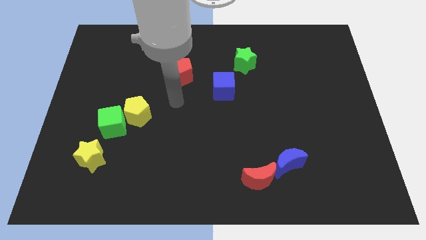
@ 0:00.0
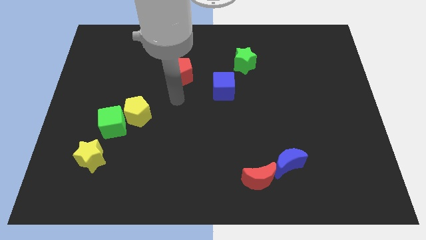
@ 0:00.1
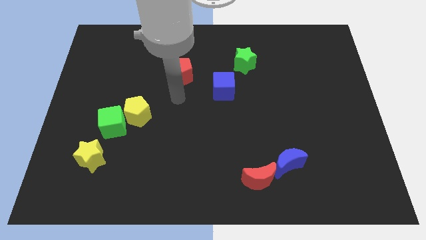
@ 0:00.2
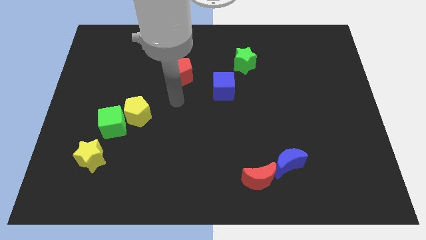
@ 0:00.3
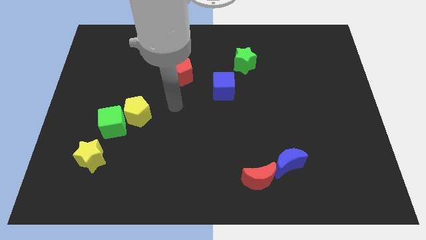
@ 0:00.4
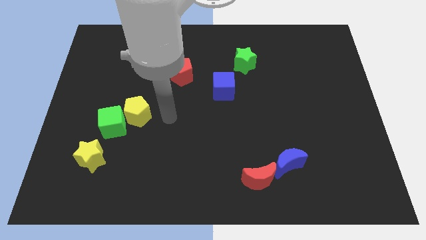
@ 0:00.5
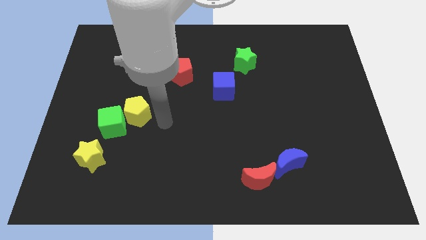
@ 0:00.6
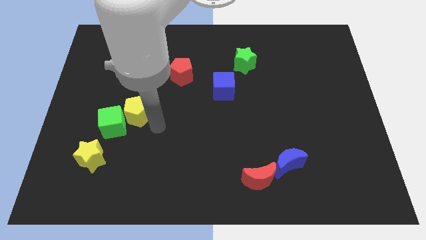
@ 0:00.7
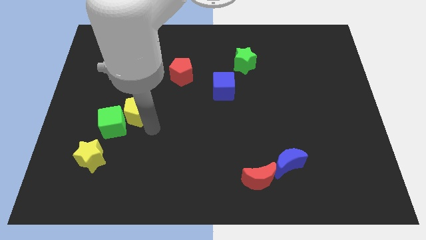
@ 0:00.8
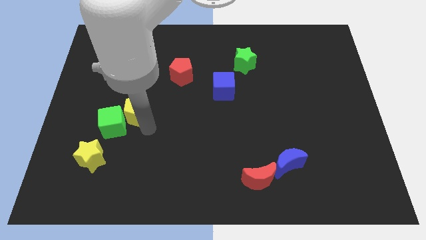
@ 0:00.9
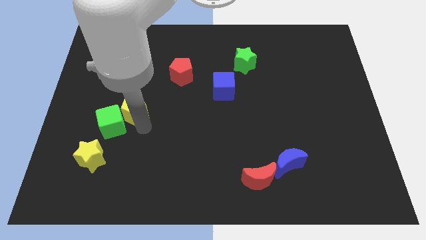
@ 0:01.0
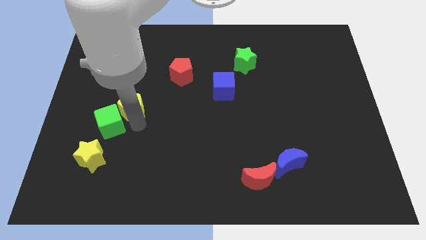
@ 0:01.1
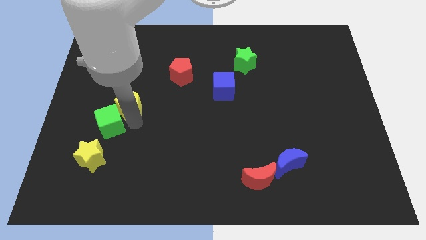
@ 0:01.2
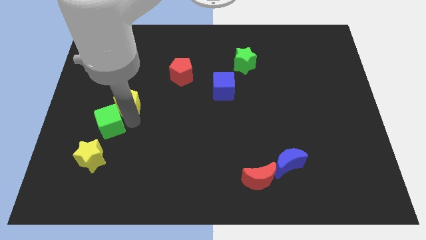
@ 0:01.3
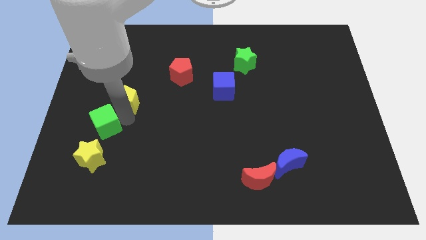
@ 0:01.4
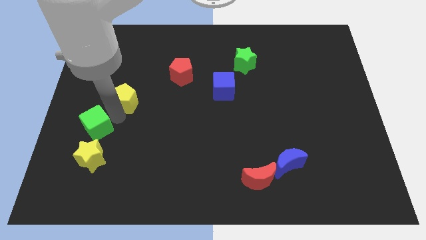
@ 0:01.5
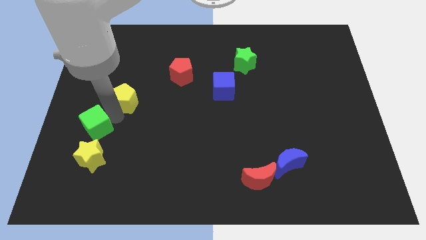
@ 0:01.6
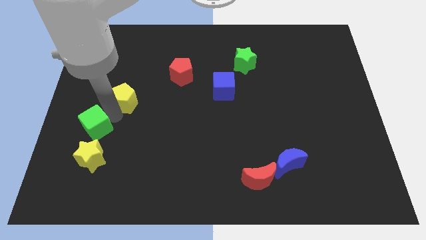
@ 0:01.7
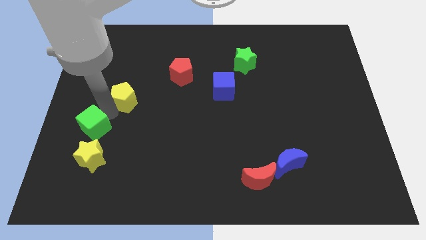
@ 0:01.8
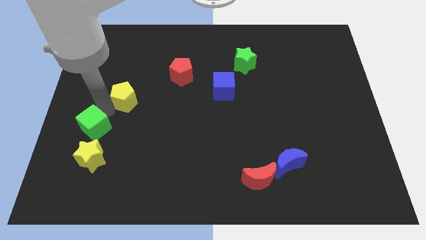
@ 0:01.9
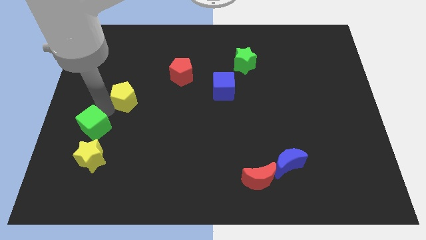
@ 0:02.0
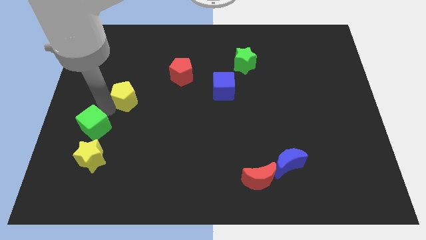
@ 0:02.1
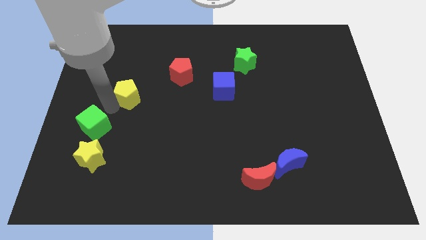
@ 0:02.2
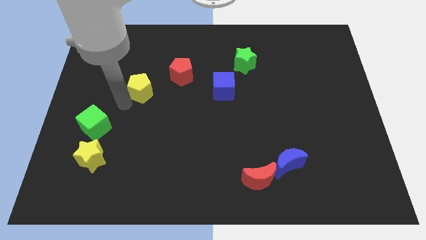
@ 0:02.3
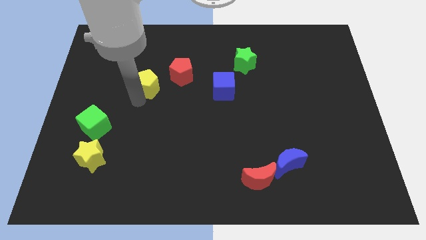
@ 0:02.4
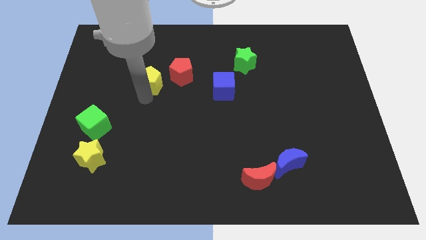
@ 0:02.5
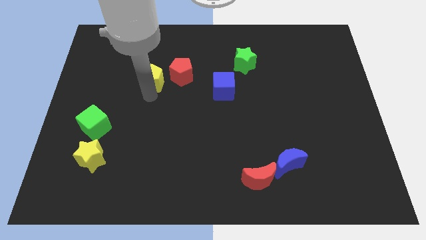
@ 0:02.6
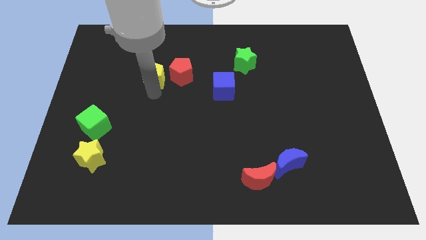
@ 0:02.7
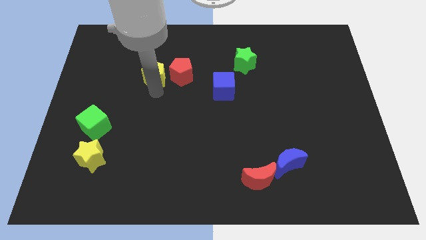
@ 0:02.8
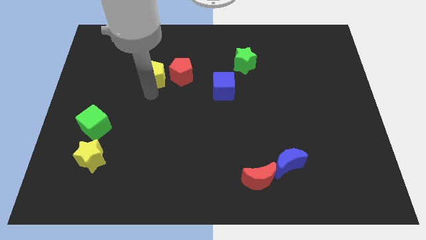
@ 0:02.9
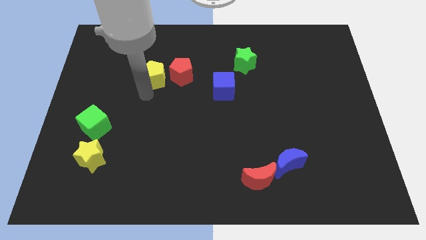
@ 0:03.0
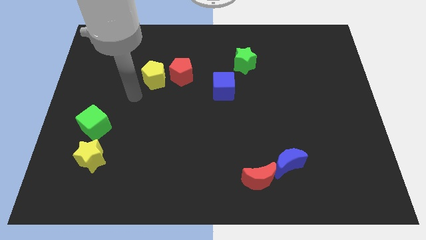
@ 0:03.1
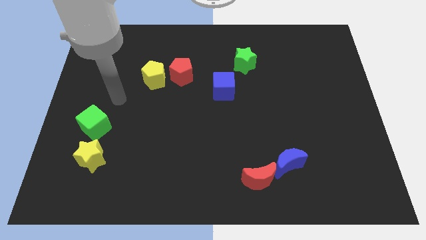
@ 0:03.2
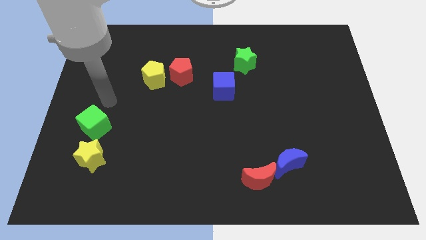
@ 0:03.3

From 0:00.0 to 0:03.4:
push the yellow pentagon to the left side of the red pentagon

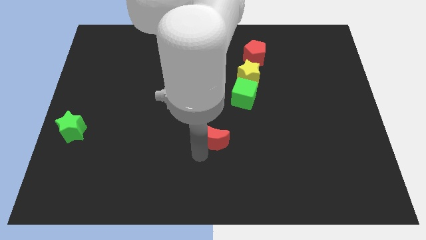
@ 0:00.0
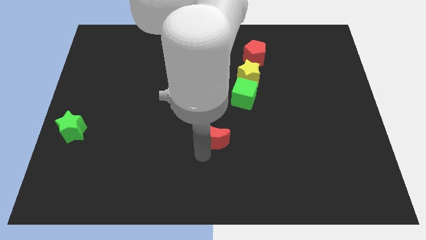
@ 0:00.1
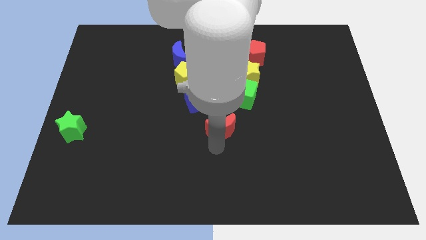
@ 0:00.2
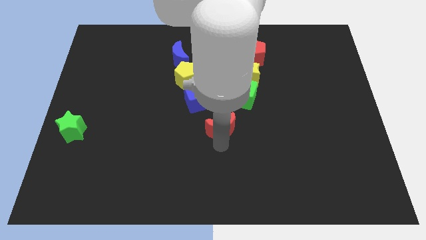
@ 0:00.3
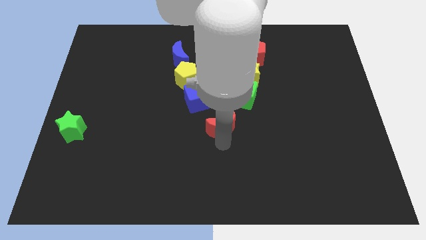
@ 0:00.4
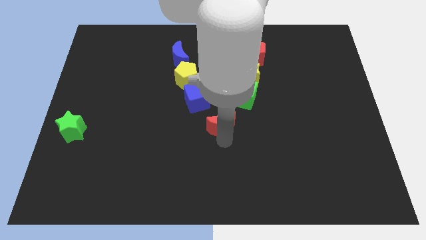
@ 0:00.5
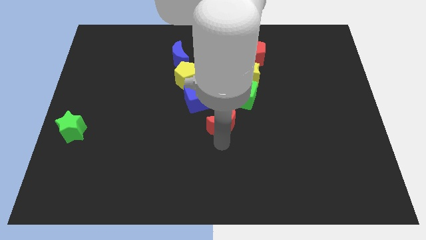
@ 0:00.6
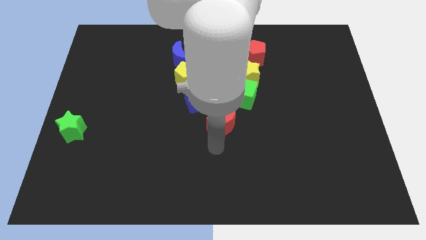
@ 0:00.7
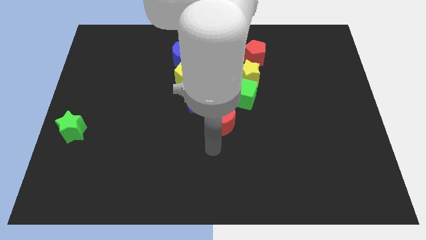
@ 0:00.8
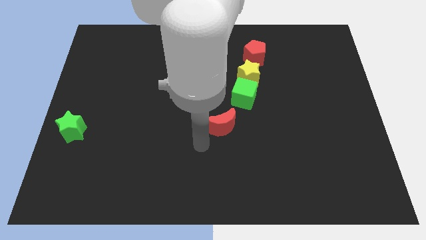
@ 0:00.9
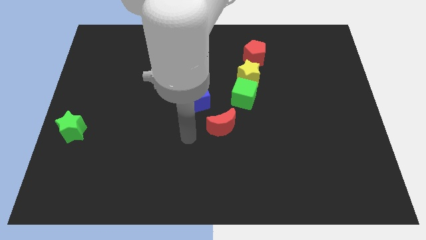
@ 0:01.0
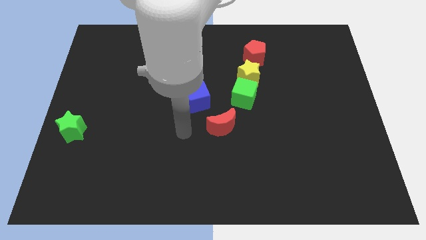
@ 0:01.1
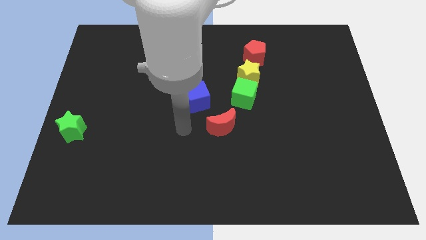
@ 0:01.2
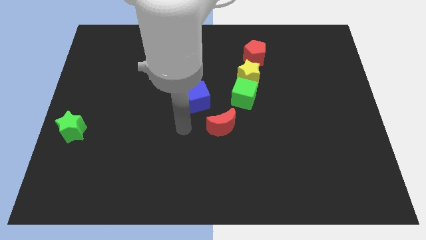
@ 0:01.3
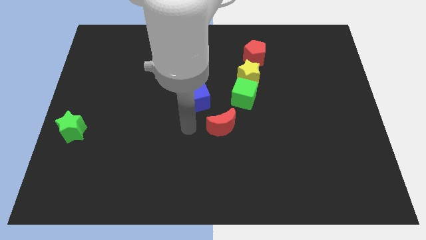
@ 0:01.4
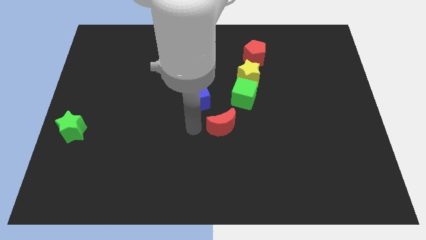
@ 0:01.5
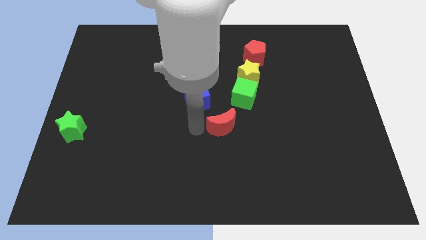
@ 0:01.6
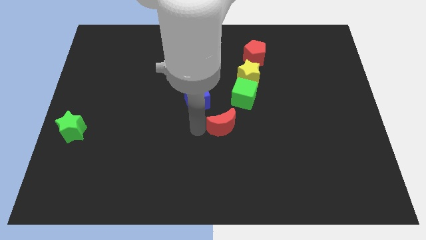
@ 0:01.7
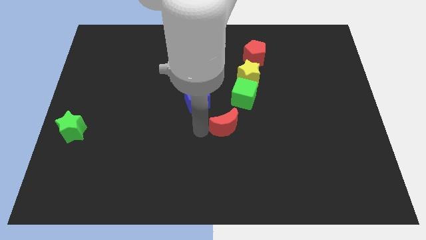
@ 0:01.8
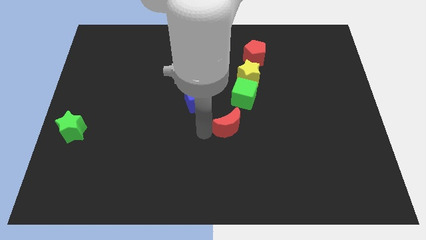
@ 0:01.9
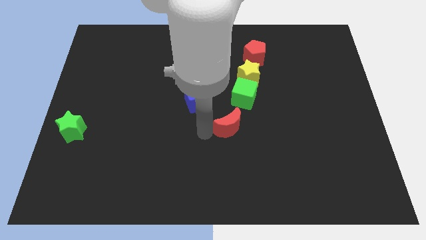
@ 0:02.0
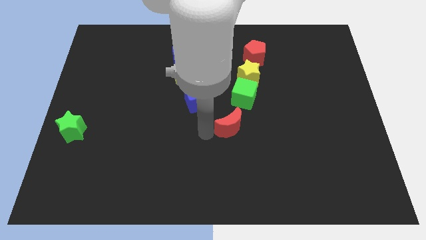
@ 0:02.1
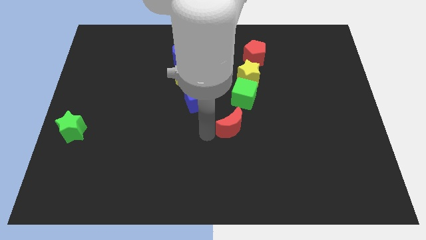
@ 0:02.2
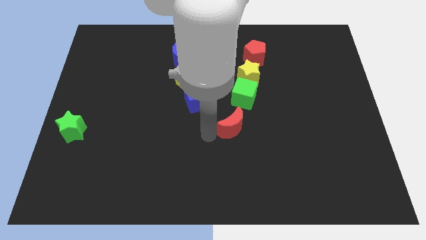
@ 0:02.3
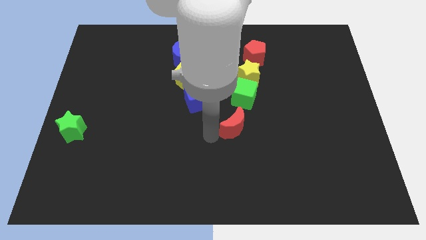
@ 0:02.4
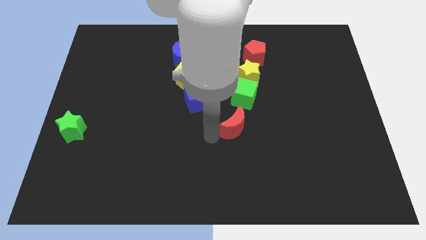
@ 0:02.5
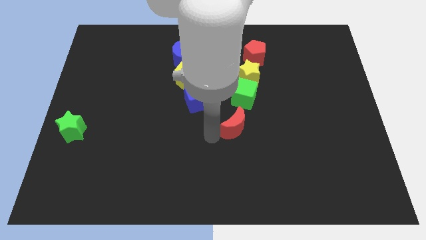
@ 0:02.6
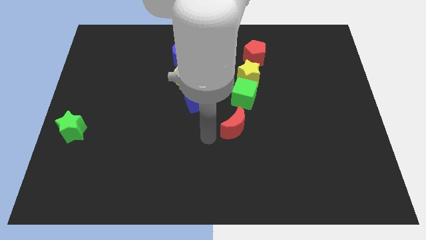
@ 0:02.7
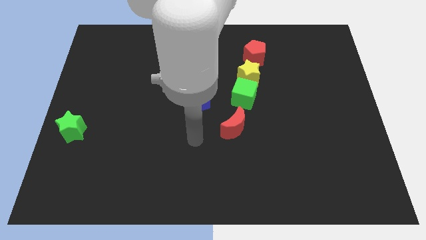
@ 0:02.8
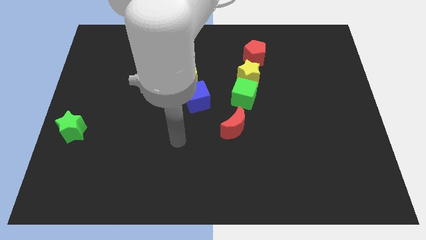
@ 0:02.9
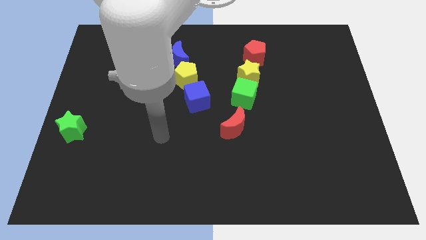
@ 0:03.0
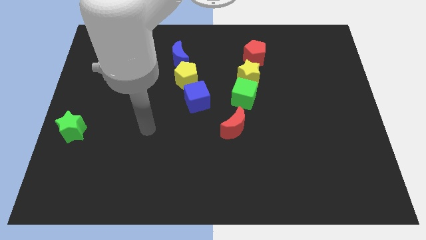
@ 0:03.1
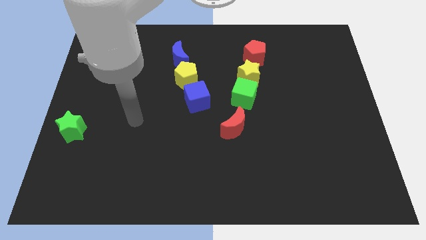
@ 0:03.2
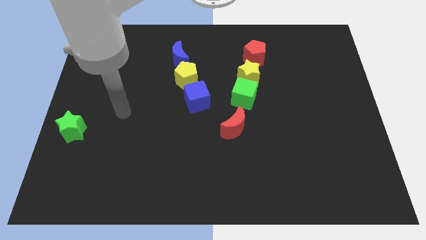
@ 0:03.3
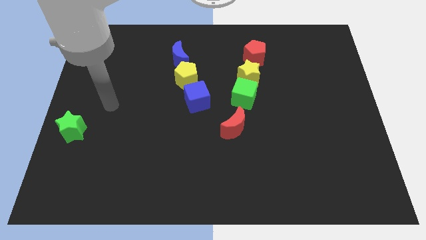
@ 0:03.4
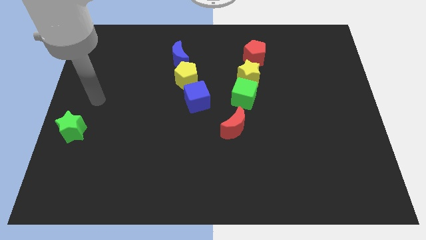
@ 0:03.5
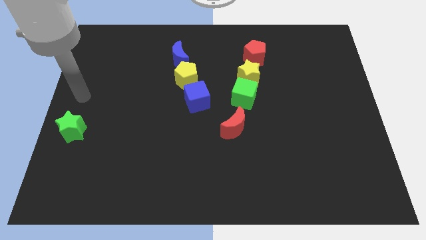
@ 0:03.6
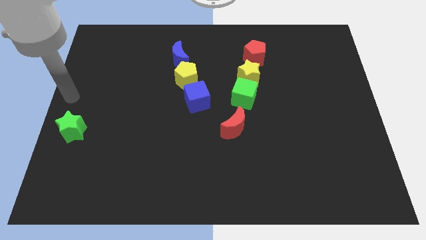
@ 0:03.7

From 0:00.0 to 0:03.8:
push the red crescent at the bottom of the green cube

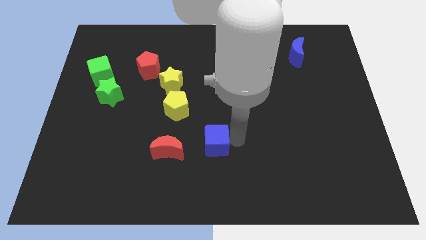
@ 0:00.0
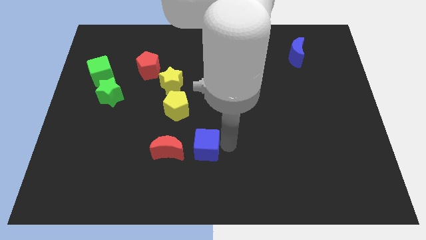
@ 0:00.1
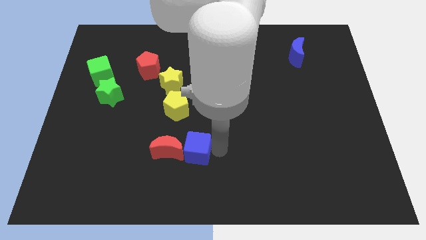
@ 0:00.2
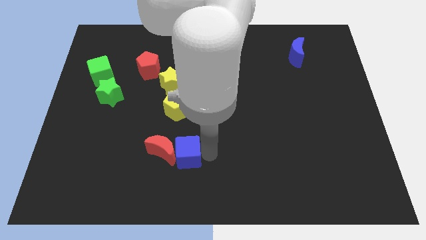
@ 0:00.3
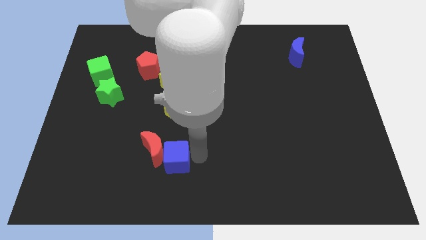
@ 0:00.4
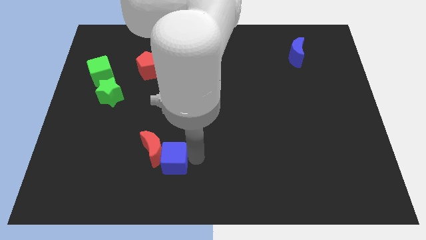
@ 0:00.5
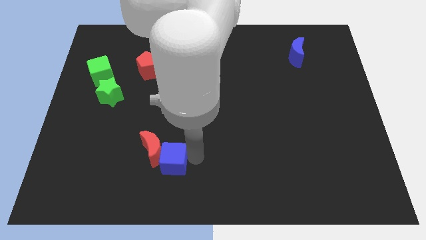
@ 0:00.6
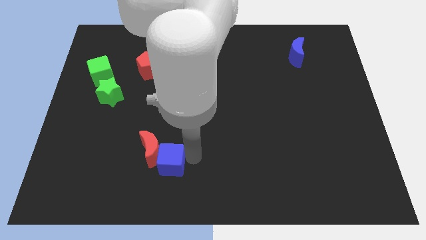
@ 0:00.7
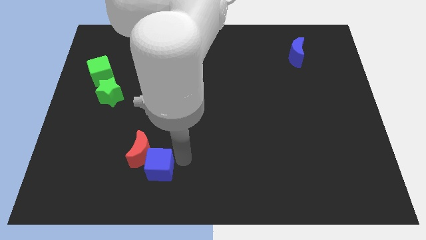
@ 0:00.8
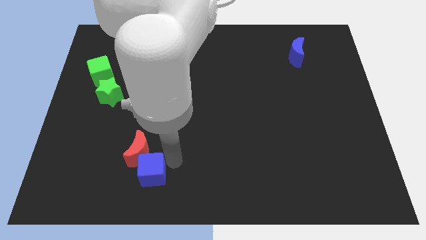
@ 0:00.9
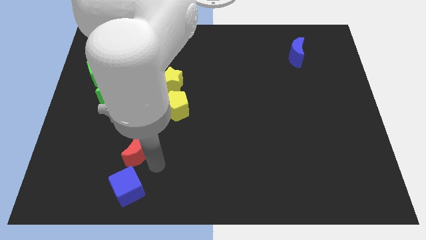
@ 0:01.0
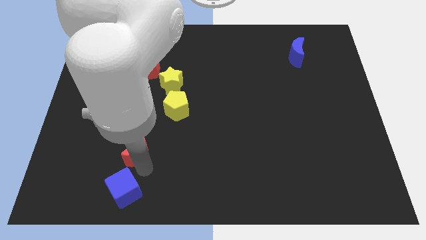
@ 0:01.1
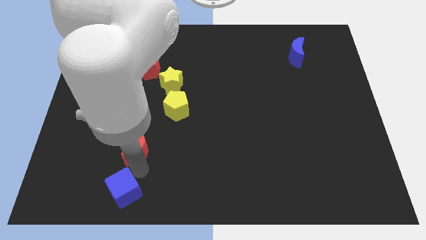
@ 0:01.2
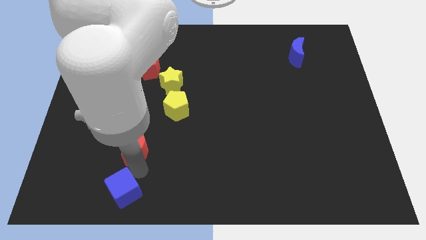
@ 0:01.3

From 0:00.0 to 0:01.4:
push blue cube to the bottom left side of the red crescent

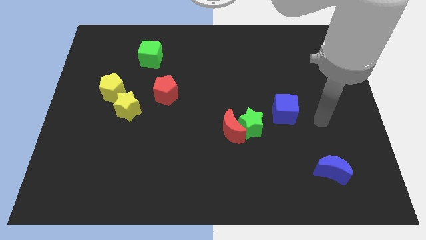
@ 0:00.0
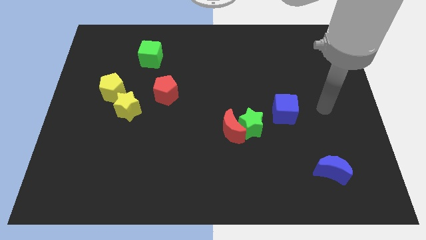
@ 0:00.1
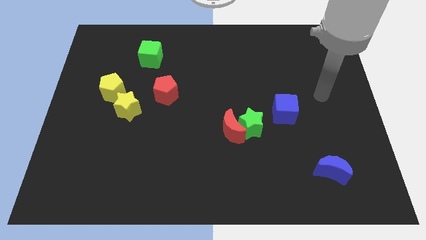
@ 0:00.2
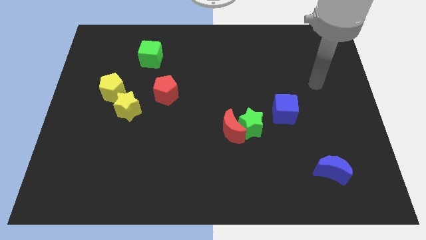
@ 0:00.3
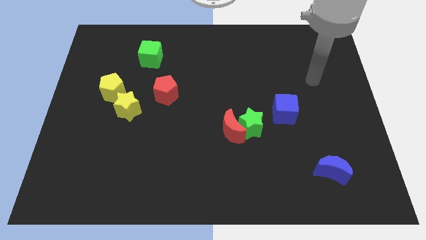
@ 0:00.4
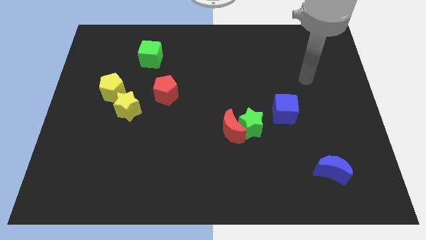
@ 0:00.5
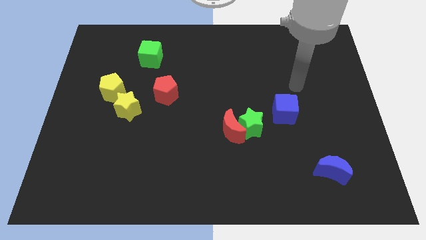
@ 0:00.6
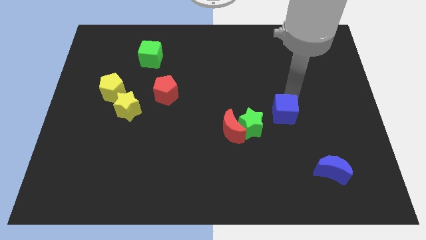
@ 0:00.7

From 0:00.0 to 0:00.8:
move arm near blue cube
